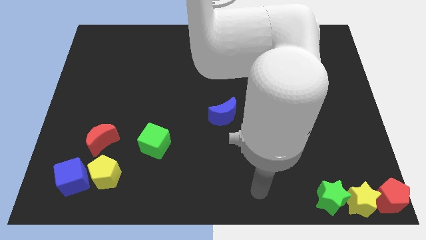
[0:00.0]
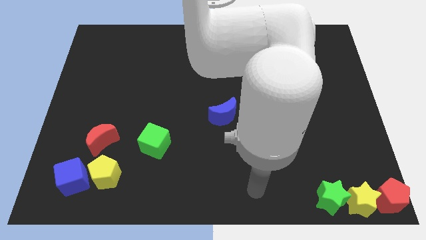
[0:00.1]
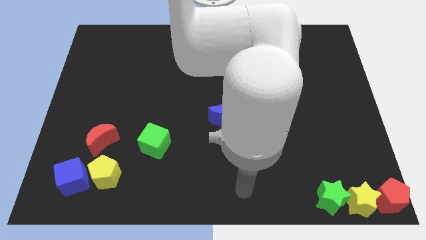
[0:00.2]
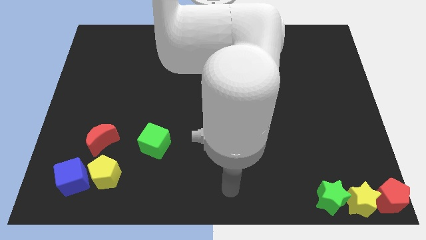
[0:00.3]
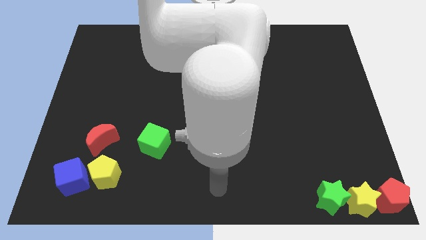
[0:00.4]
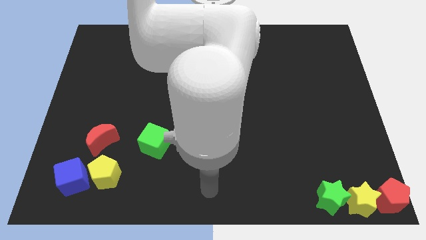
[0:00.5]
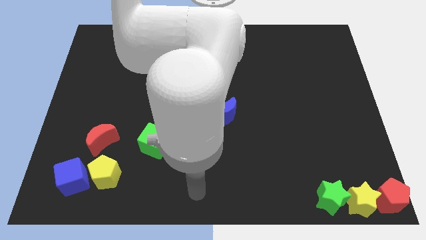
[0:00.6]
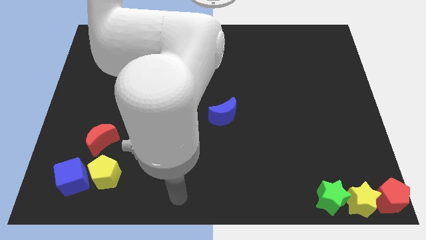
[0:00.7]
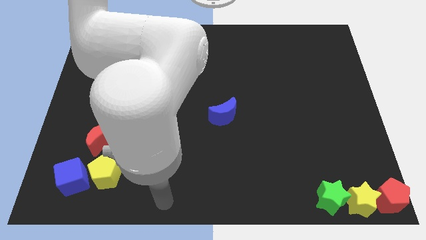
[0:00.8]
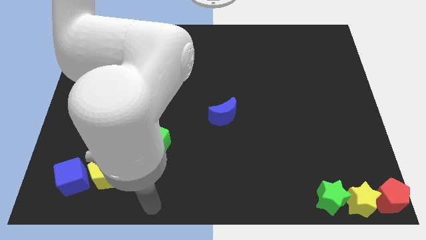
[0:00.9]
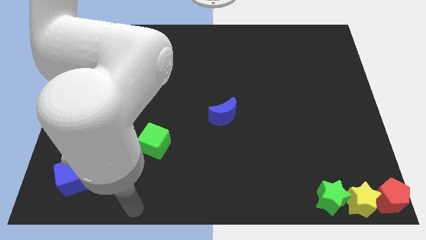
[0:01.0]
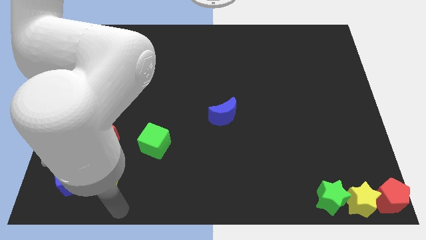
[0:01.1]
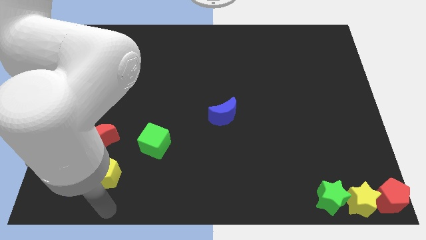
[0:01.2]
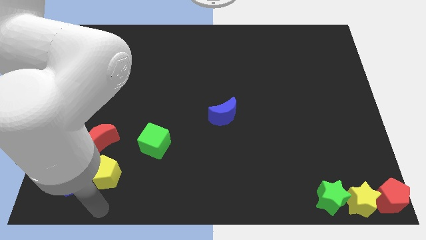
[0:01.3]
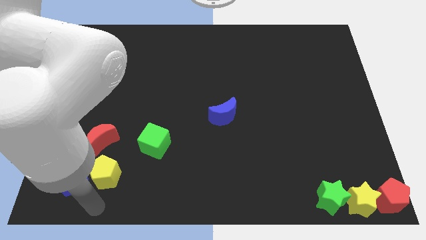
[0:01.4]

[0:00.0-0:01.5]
point the arm below the yellow pentagon

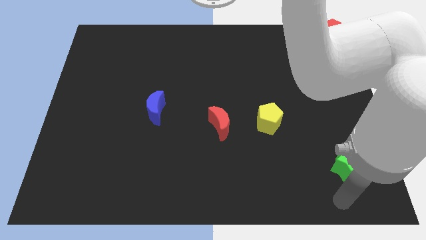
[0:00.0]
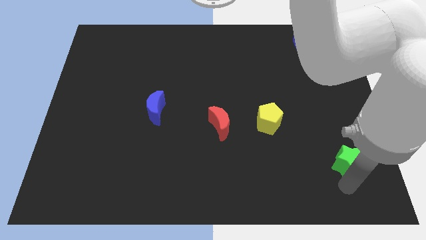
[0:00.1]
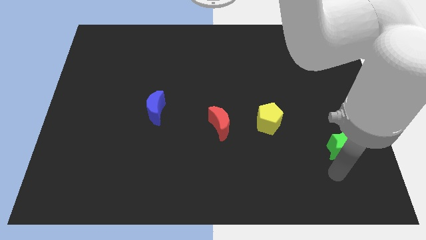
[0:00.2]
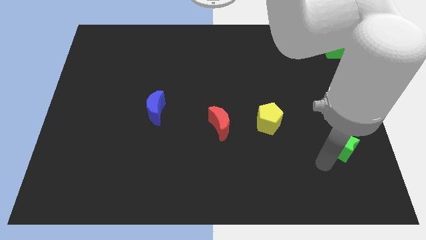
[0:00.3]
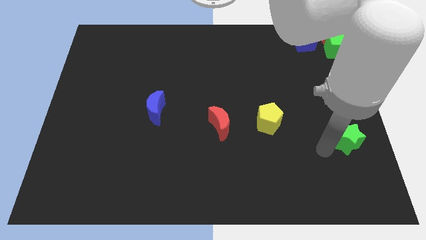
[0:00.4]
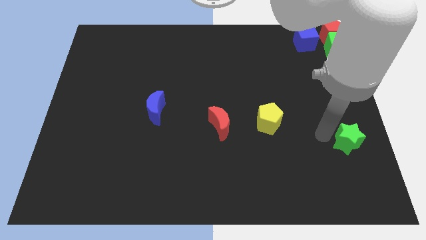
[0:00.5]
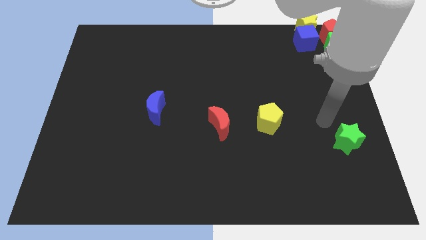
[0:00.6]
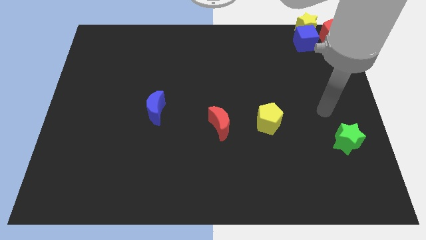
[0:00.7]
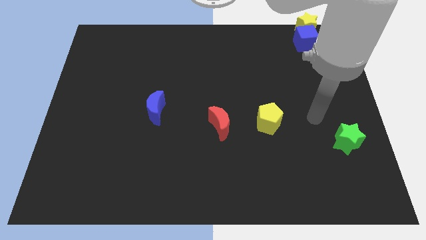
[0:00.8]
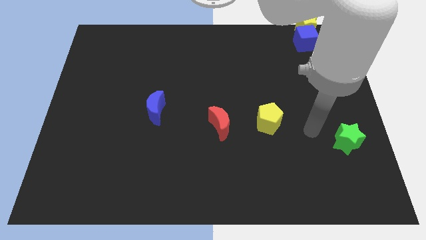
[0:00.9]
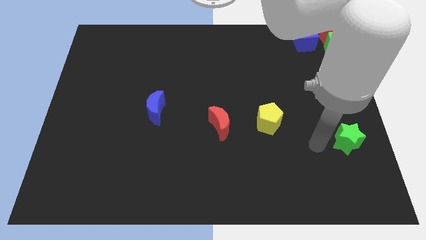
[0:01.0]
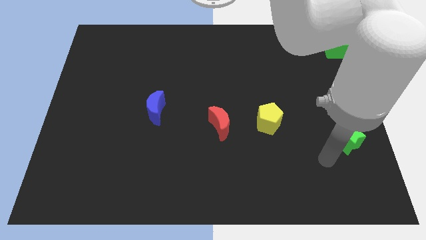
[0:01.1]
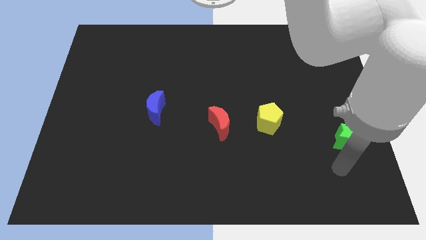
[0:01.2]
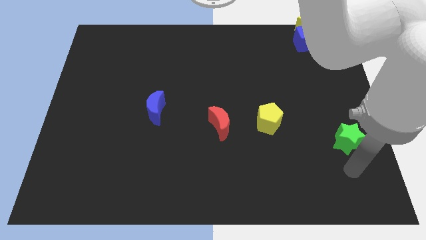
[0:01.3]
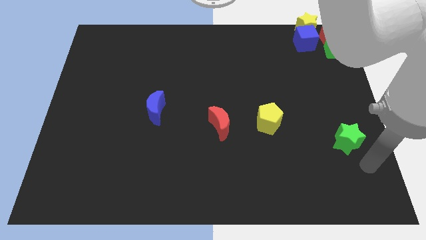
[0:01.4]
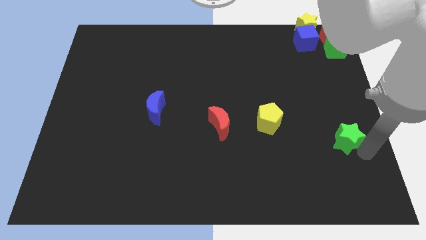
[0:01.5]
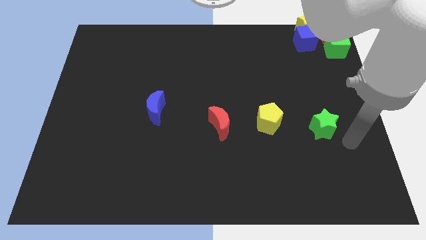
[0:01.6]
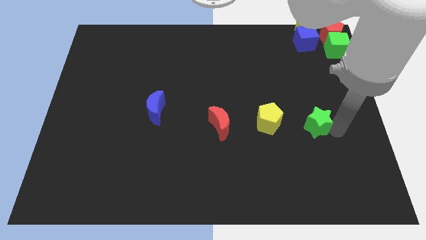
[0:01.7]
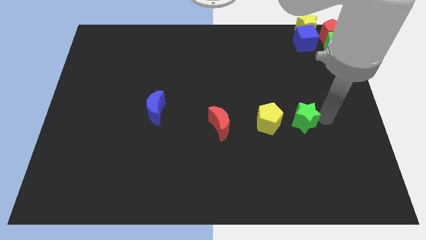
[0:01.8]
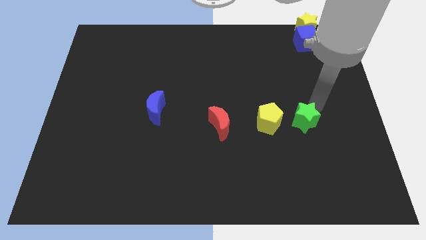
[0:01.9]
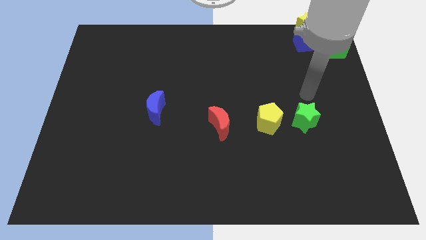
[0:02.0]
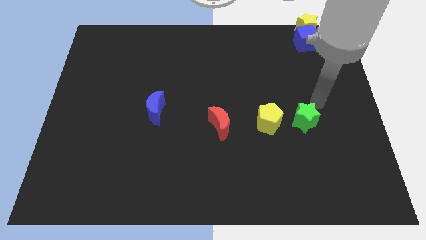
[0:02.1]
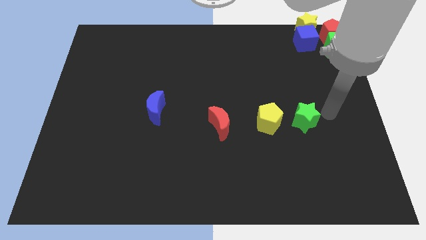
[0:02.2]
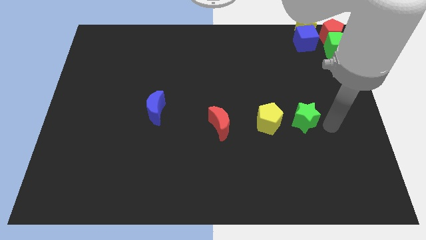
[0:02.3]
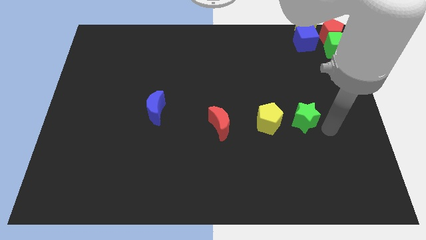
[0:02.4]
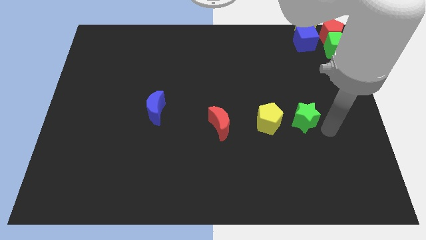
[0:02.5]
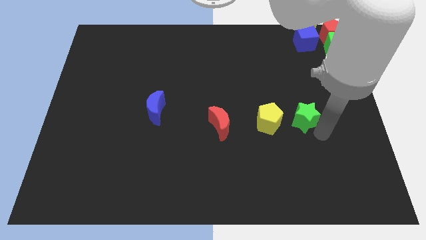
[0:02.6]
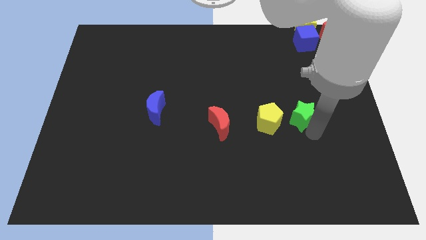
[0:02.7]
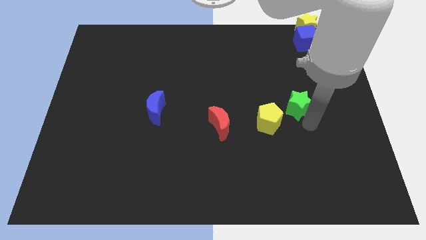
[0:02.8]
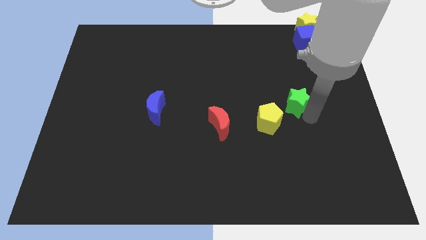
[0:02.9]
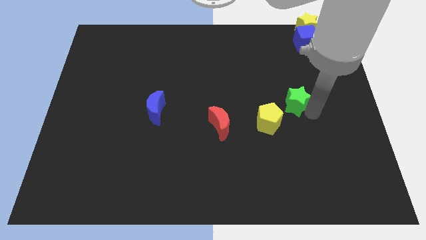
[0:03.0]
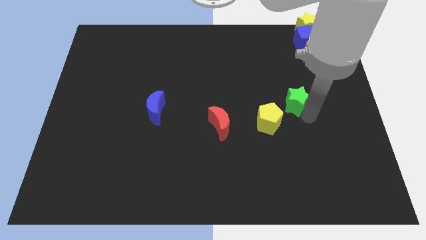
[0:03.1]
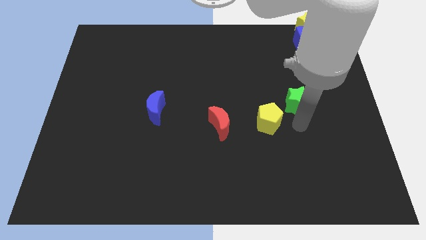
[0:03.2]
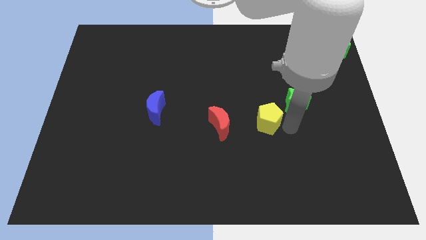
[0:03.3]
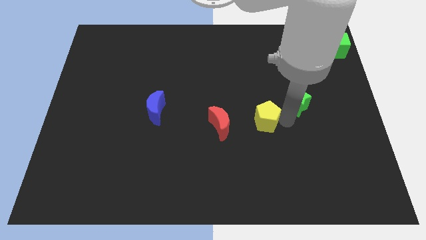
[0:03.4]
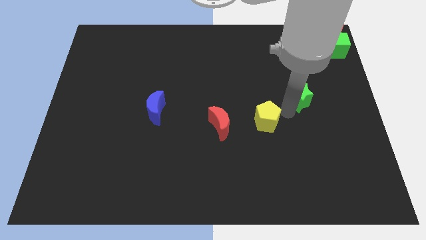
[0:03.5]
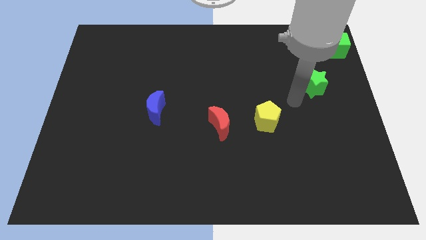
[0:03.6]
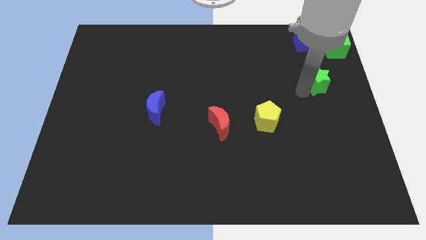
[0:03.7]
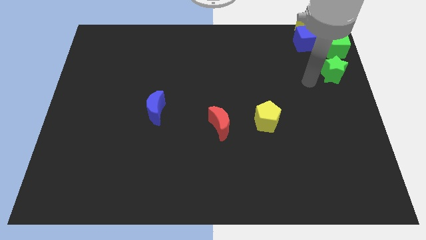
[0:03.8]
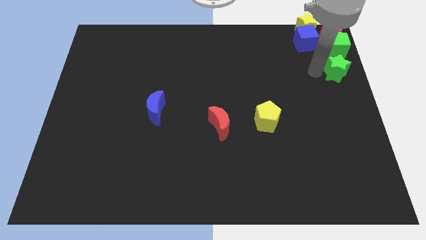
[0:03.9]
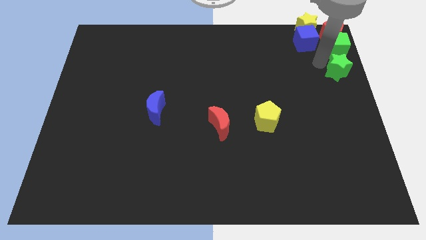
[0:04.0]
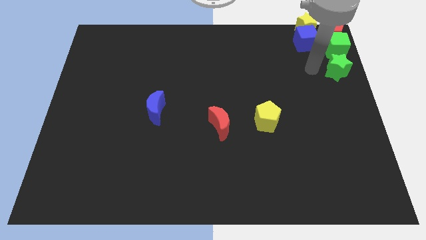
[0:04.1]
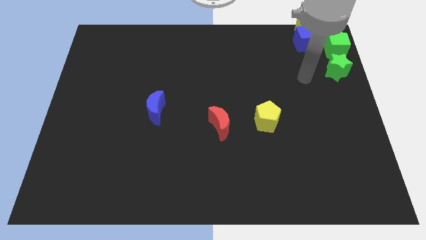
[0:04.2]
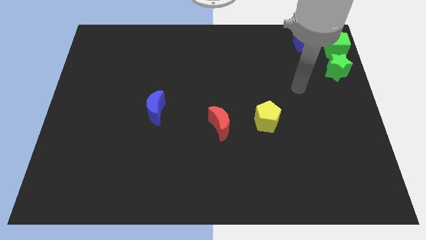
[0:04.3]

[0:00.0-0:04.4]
move the green star towards the bottom of green cube

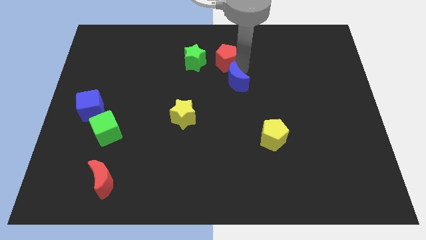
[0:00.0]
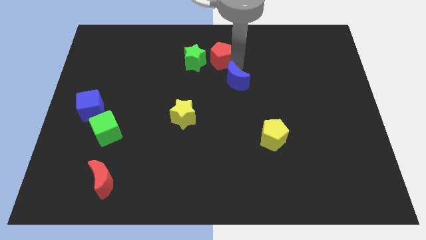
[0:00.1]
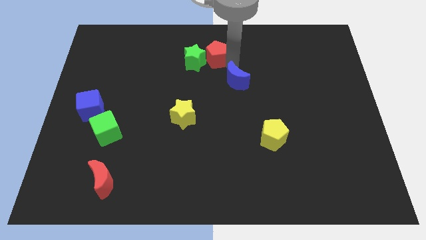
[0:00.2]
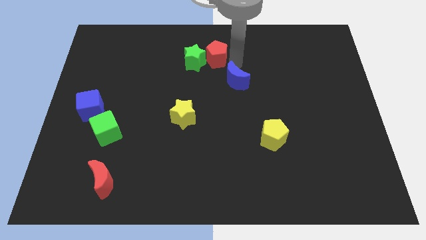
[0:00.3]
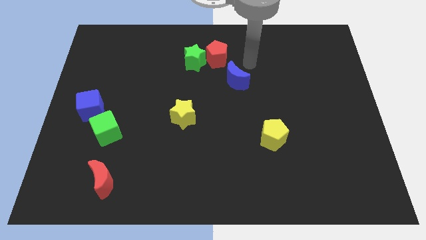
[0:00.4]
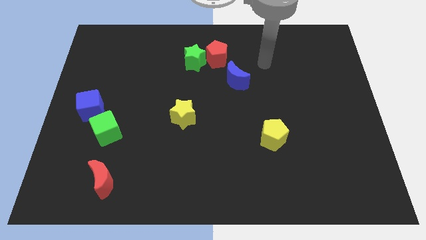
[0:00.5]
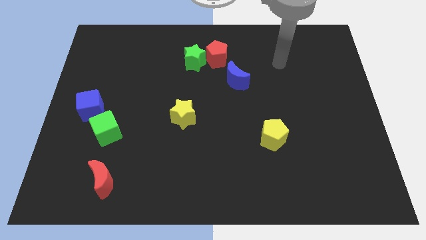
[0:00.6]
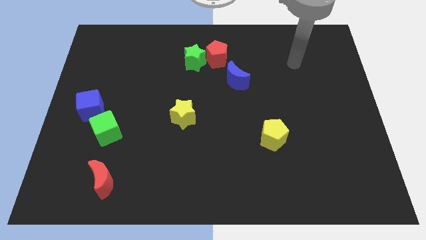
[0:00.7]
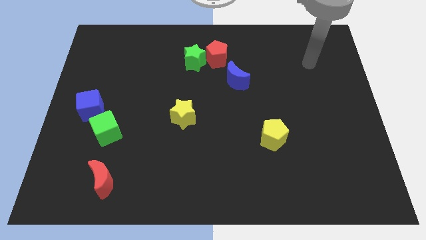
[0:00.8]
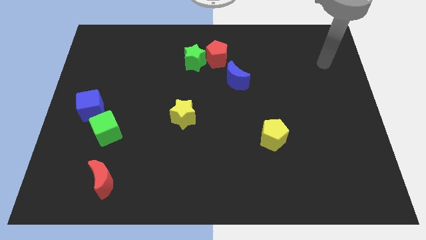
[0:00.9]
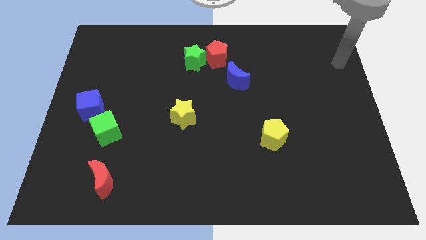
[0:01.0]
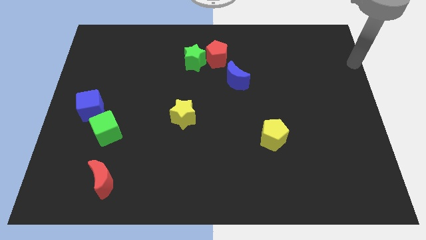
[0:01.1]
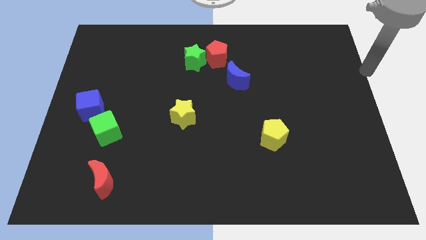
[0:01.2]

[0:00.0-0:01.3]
move the red pentagon to the right of the green star

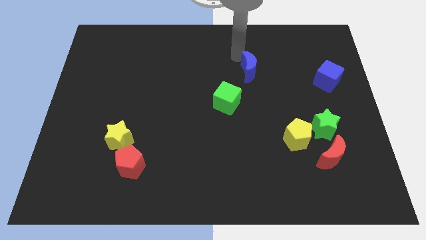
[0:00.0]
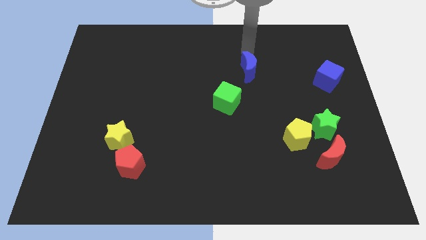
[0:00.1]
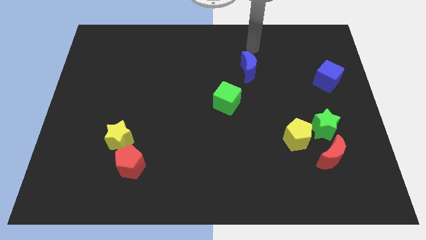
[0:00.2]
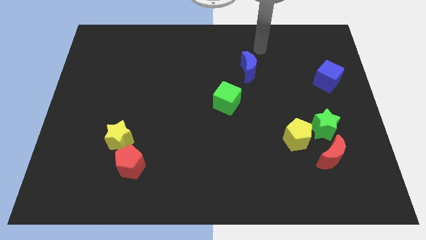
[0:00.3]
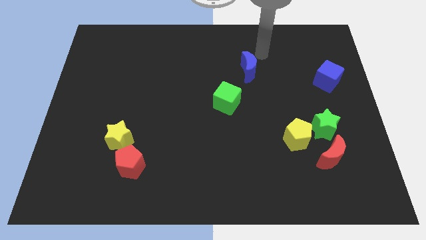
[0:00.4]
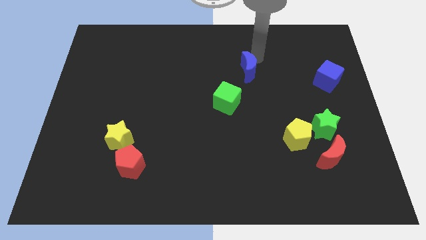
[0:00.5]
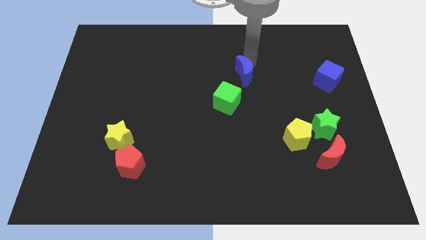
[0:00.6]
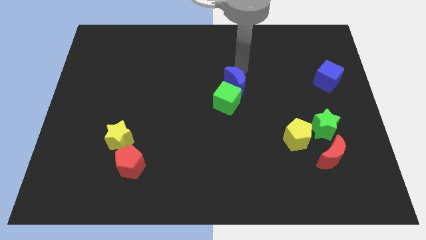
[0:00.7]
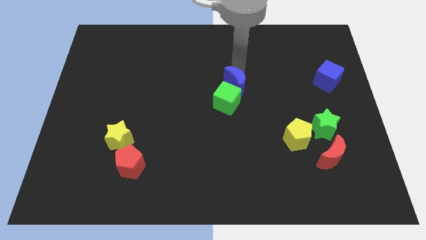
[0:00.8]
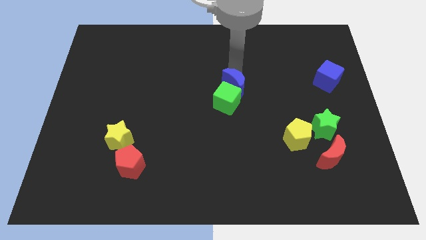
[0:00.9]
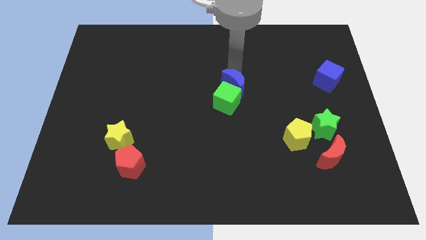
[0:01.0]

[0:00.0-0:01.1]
slide blue moon into green cube

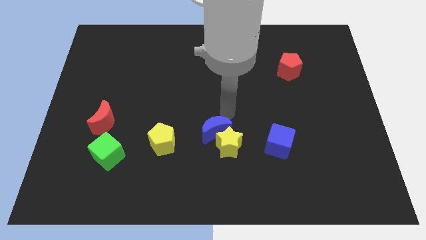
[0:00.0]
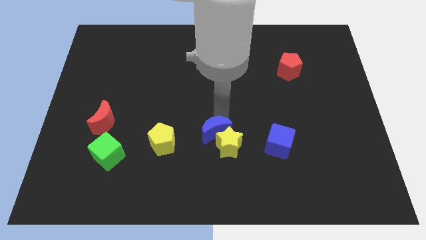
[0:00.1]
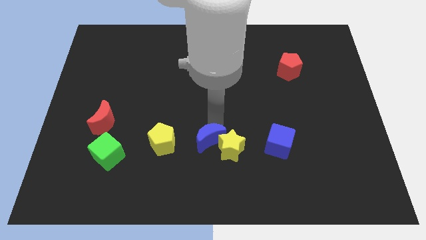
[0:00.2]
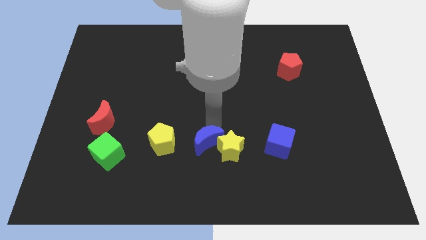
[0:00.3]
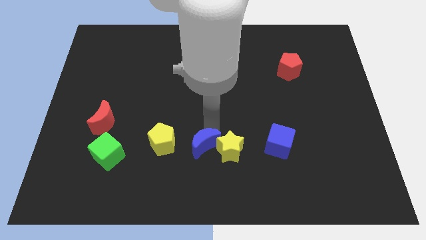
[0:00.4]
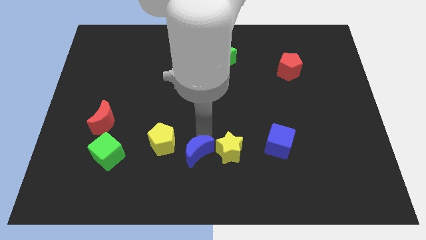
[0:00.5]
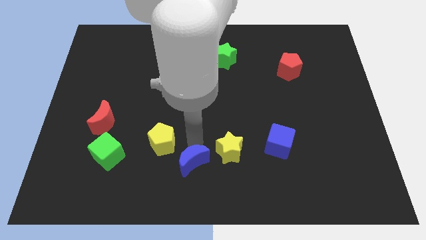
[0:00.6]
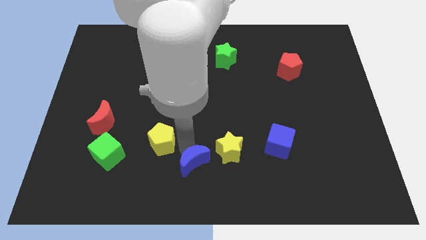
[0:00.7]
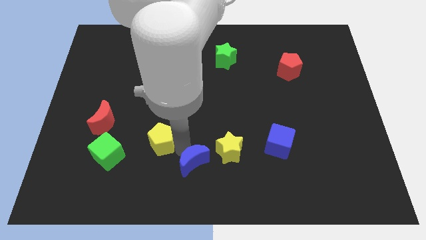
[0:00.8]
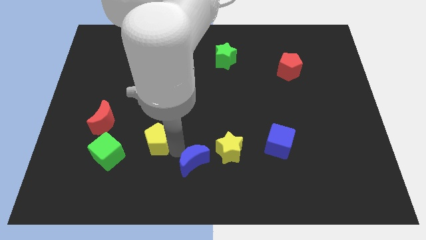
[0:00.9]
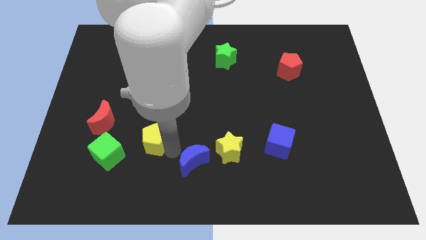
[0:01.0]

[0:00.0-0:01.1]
move the blue crescent to the left of the yellow star
